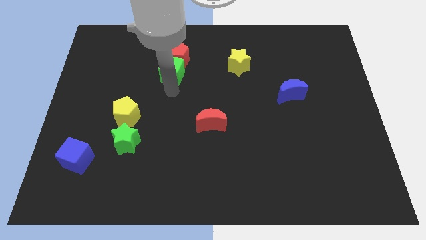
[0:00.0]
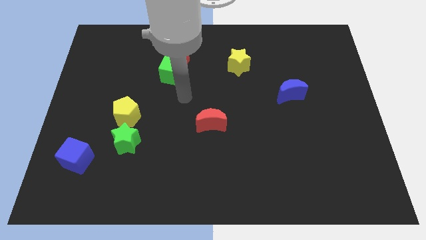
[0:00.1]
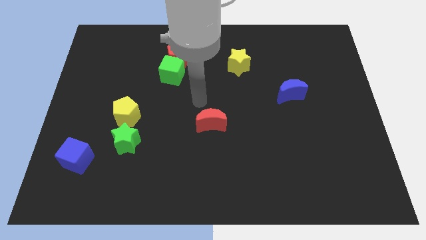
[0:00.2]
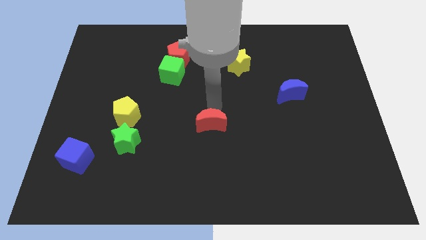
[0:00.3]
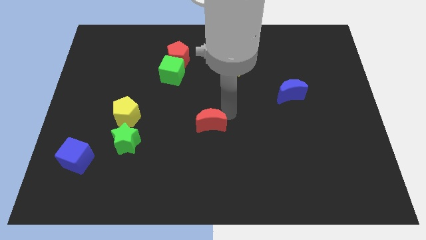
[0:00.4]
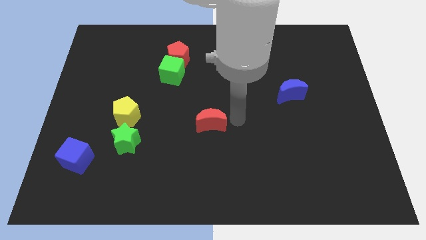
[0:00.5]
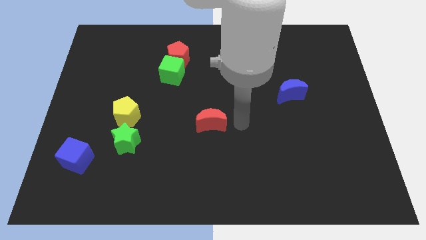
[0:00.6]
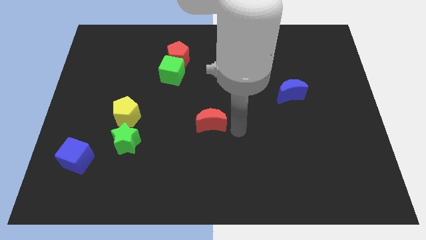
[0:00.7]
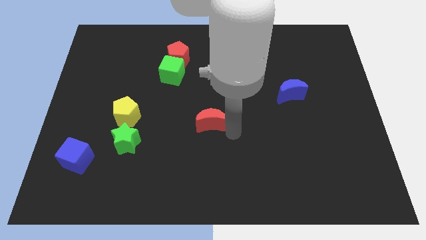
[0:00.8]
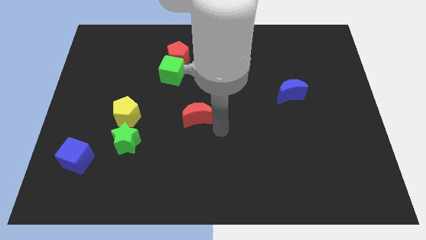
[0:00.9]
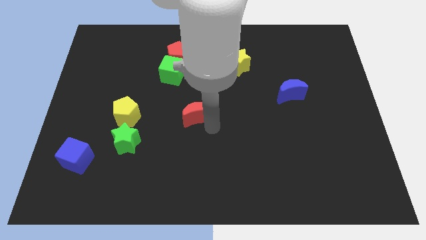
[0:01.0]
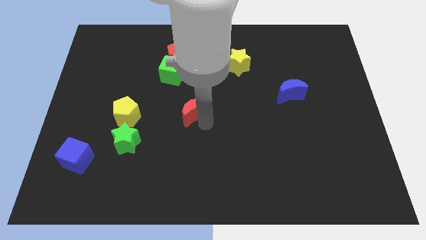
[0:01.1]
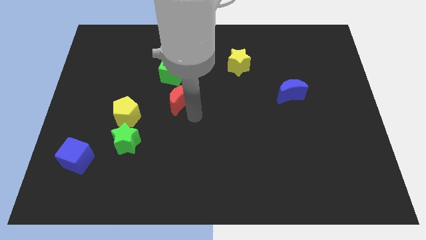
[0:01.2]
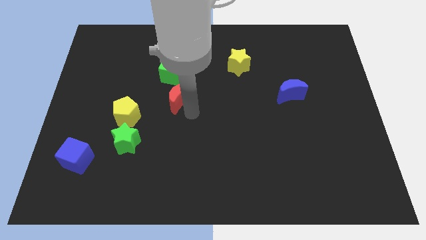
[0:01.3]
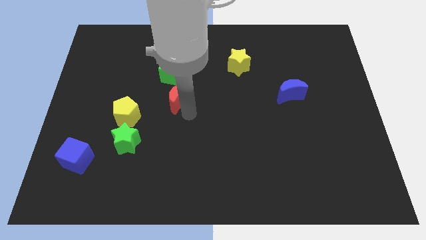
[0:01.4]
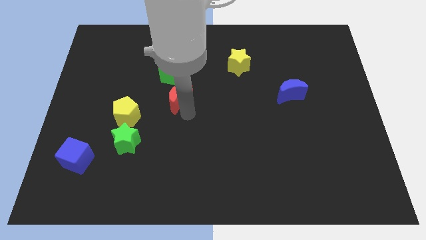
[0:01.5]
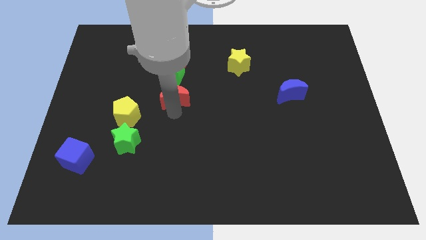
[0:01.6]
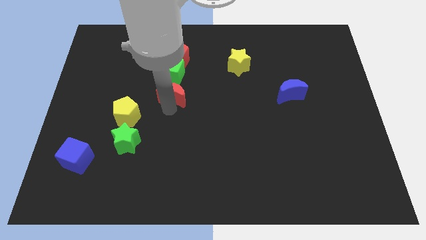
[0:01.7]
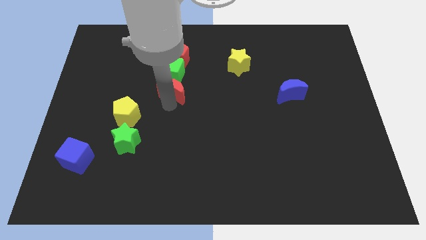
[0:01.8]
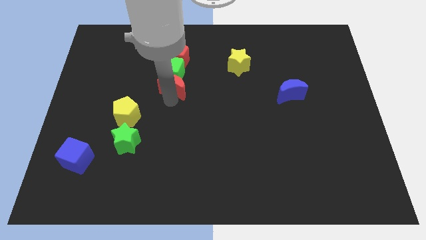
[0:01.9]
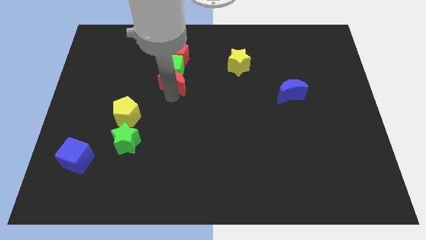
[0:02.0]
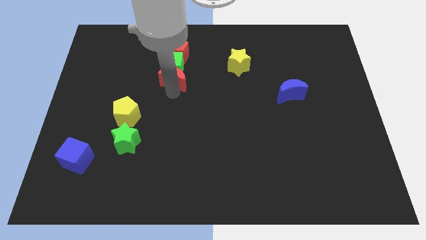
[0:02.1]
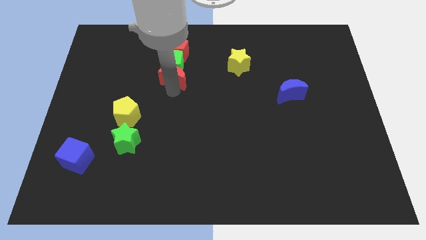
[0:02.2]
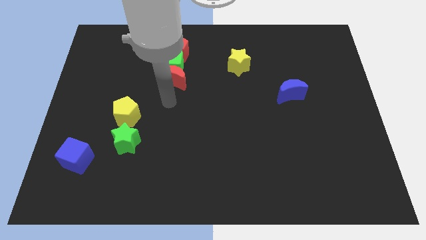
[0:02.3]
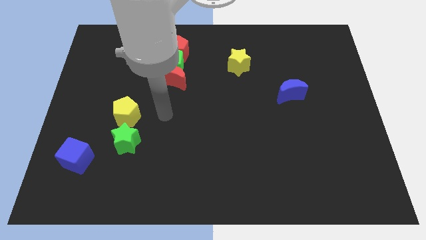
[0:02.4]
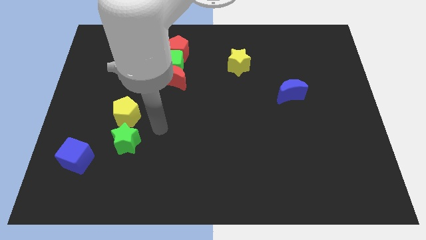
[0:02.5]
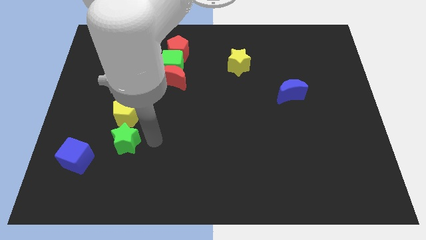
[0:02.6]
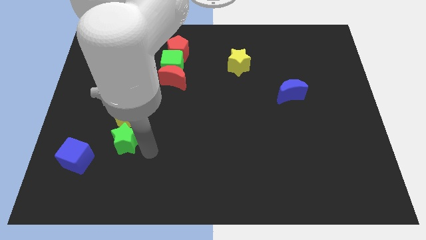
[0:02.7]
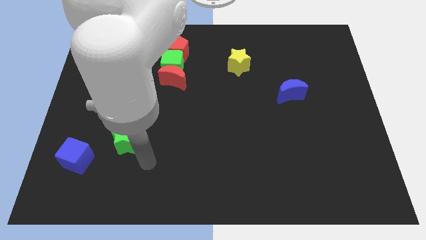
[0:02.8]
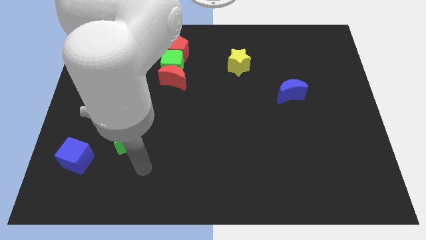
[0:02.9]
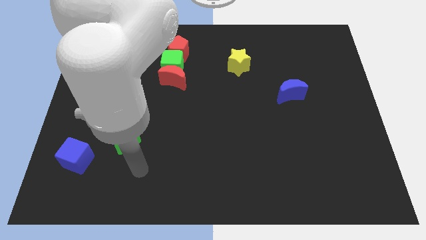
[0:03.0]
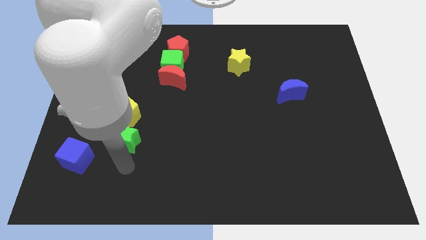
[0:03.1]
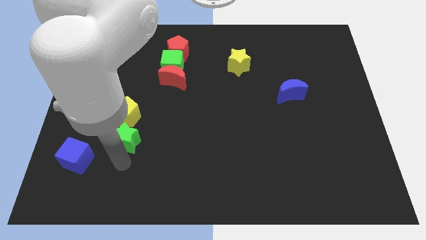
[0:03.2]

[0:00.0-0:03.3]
push the red crescent to the bottom side of the green cube

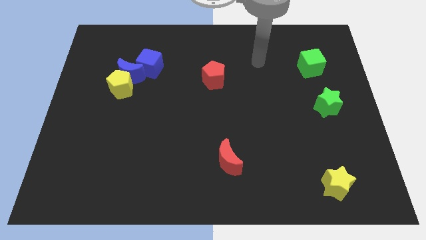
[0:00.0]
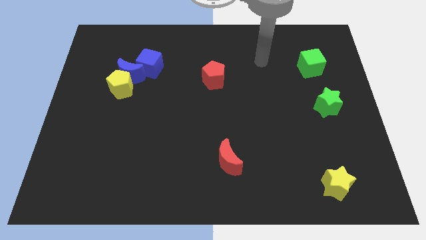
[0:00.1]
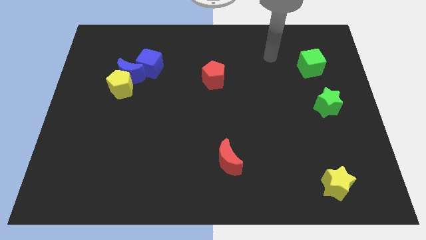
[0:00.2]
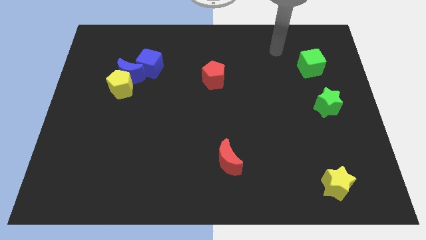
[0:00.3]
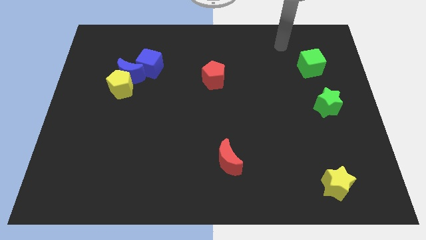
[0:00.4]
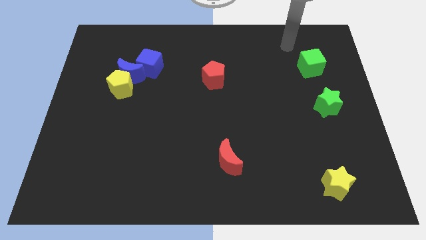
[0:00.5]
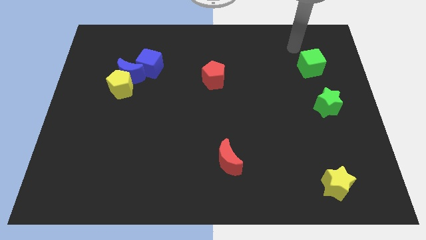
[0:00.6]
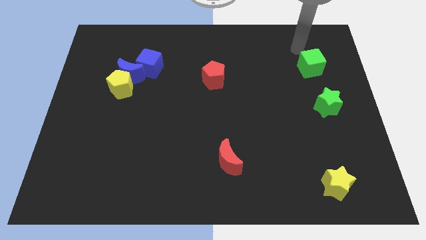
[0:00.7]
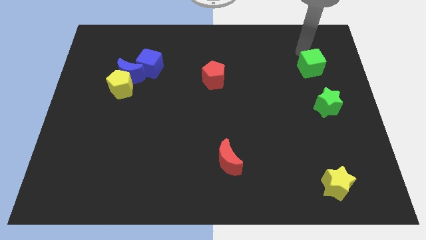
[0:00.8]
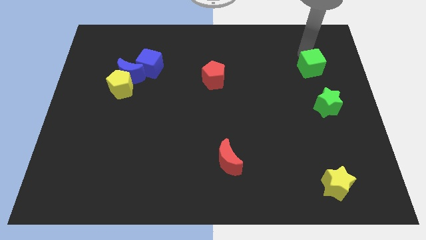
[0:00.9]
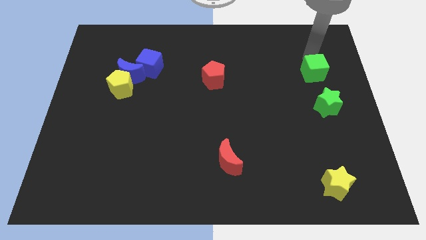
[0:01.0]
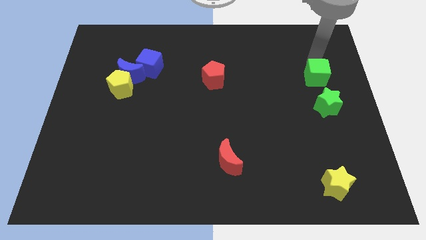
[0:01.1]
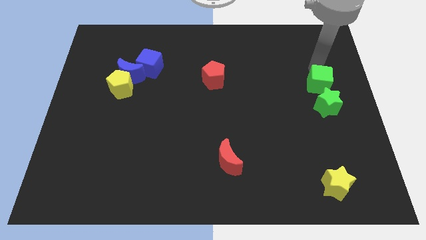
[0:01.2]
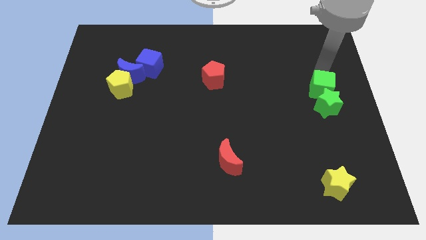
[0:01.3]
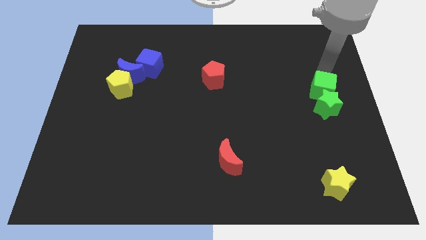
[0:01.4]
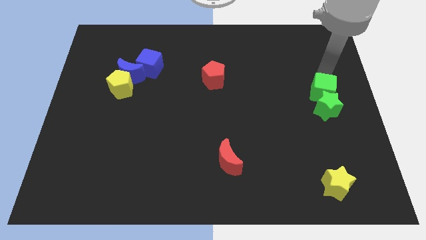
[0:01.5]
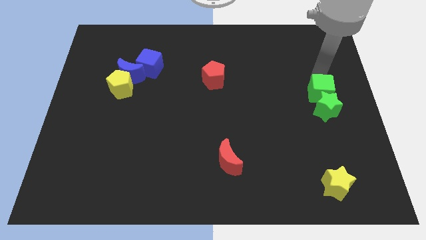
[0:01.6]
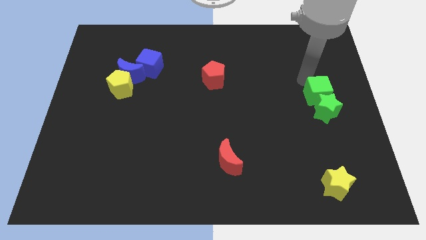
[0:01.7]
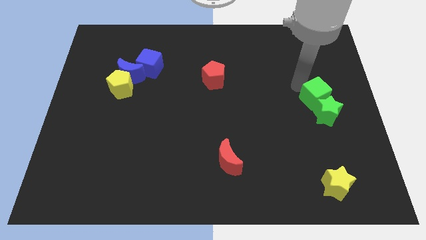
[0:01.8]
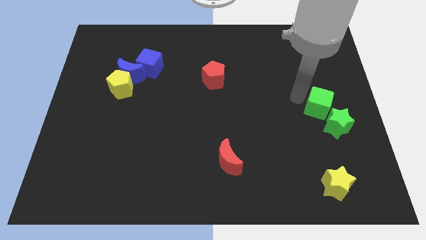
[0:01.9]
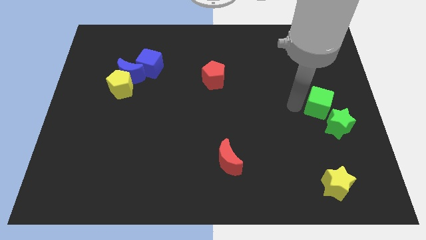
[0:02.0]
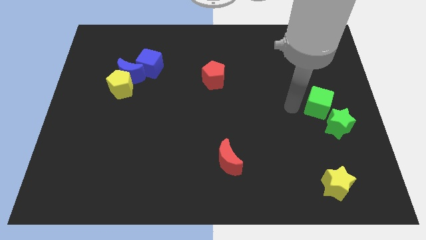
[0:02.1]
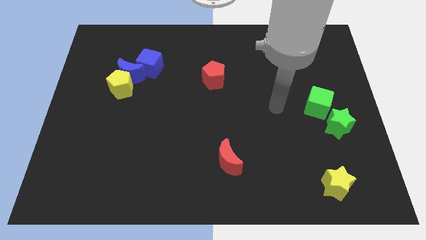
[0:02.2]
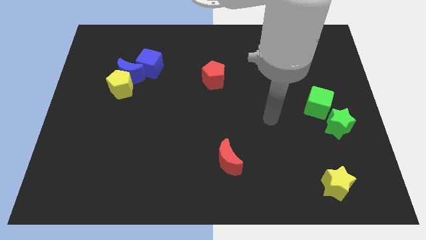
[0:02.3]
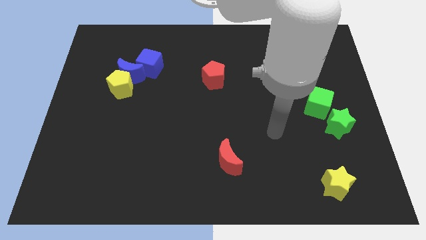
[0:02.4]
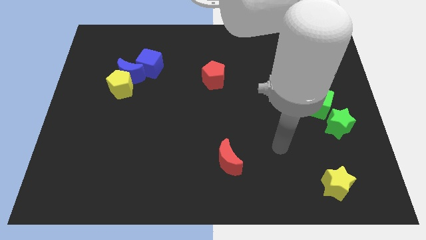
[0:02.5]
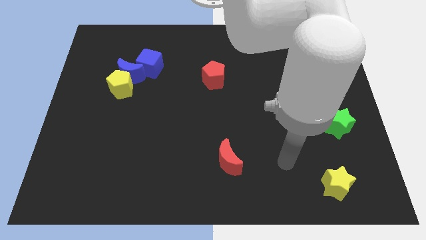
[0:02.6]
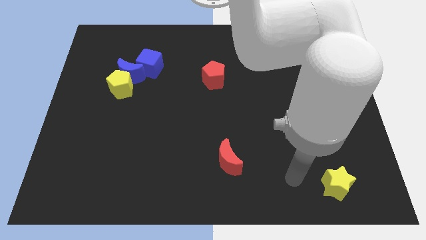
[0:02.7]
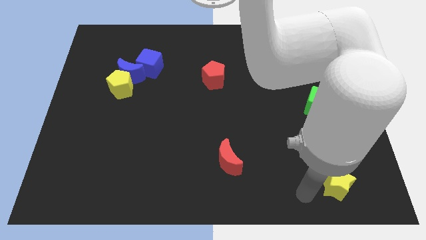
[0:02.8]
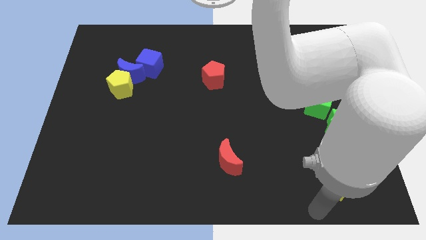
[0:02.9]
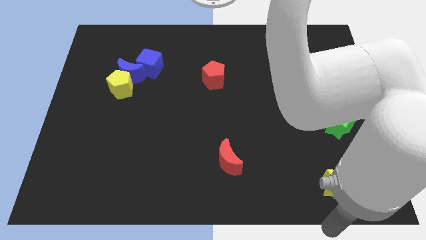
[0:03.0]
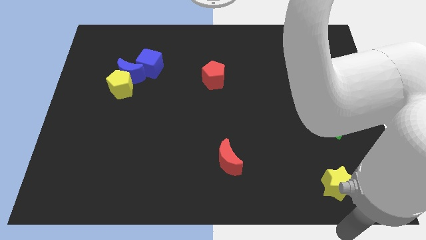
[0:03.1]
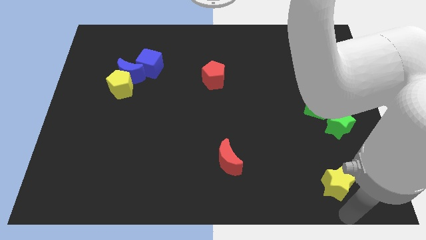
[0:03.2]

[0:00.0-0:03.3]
slightly move green cube and green star towards bottom right

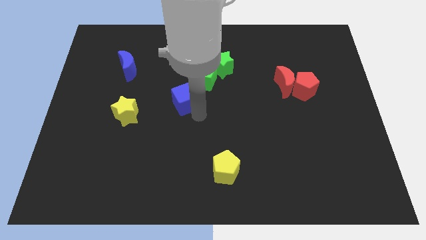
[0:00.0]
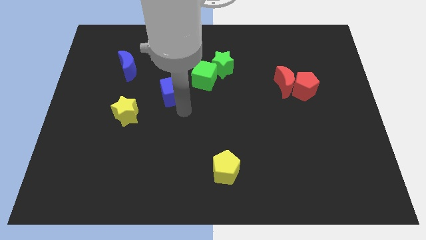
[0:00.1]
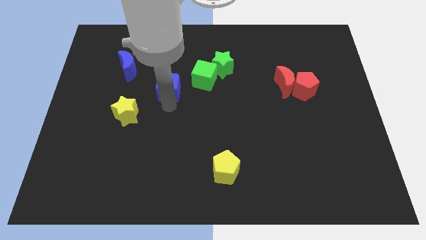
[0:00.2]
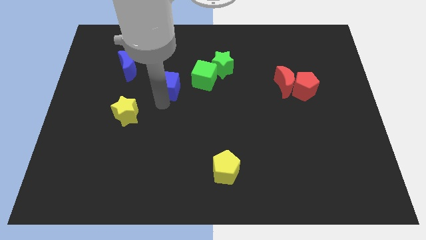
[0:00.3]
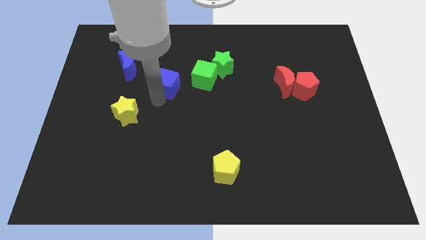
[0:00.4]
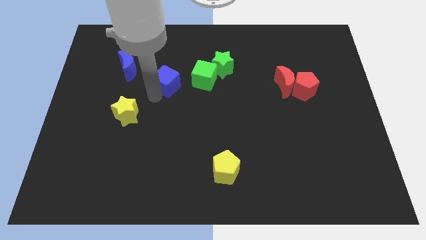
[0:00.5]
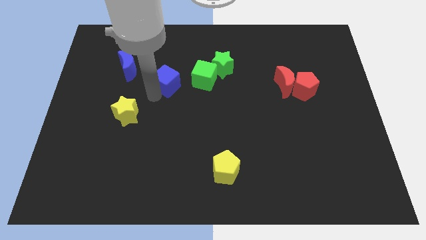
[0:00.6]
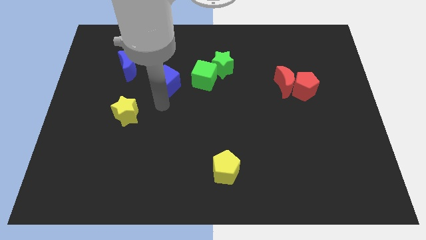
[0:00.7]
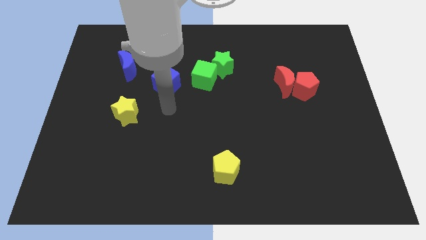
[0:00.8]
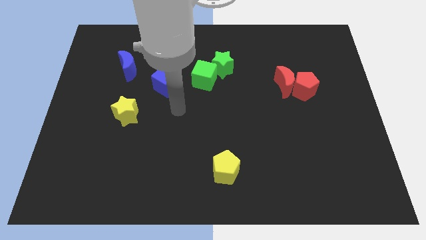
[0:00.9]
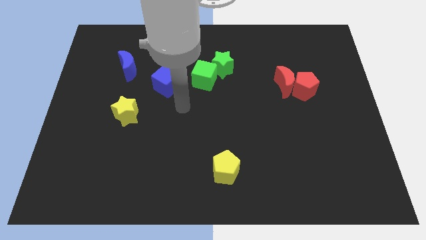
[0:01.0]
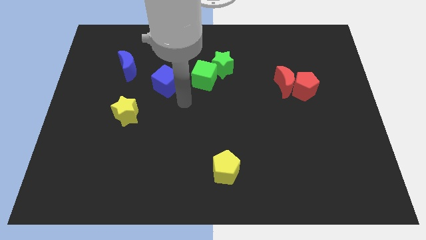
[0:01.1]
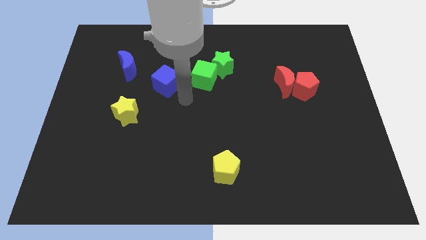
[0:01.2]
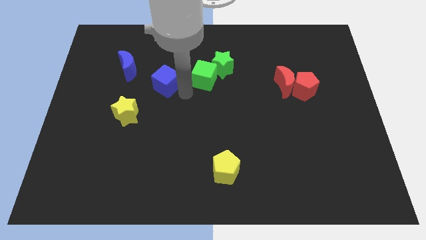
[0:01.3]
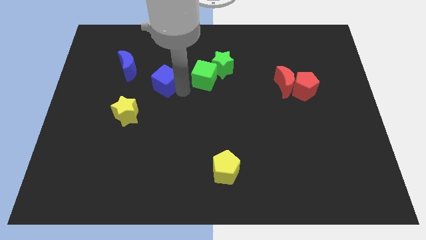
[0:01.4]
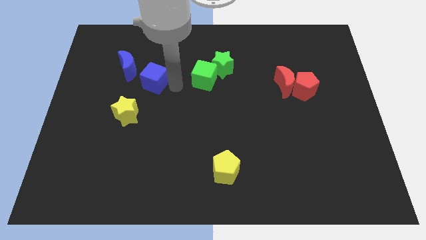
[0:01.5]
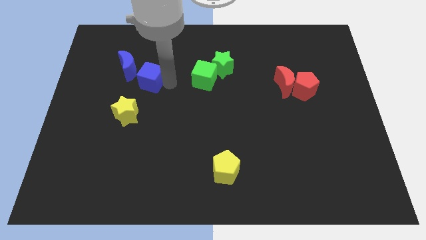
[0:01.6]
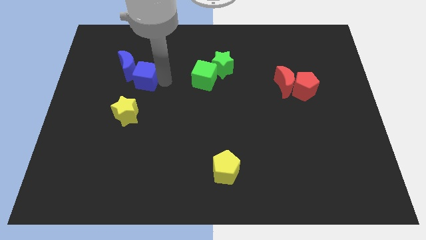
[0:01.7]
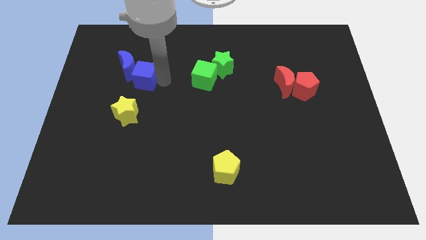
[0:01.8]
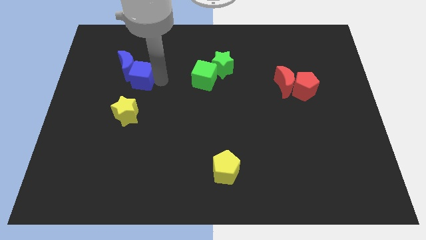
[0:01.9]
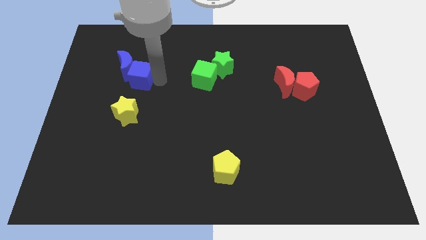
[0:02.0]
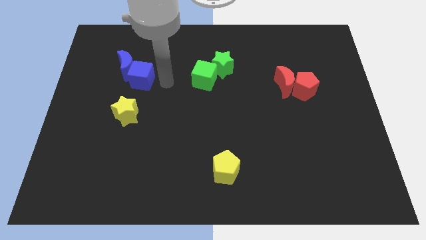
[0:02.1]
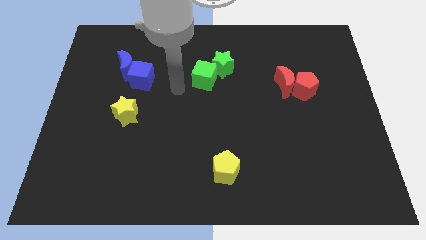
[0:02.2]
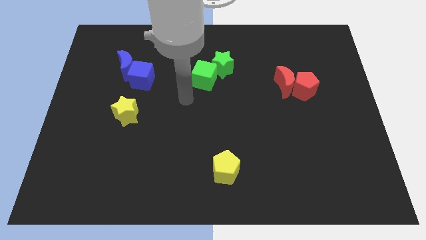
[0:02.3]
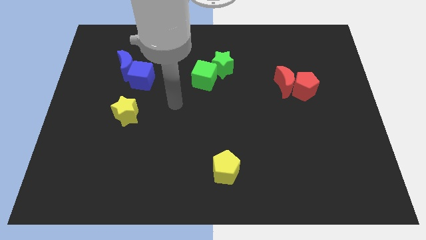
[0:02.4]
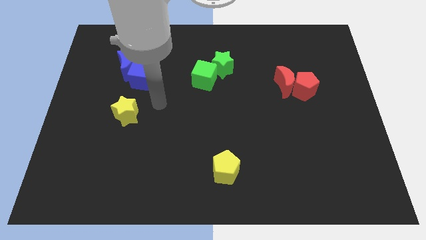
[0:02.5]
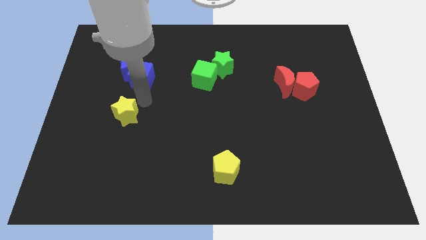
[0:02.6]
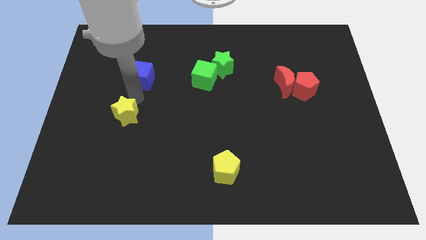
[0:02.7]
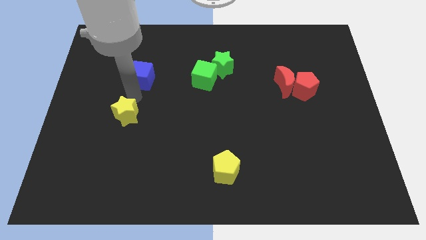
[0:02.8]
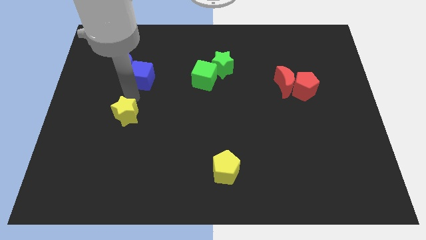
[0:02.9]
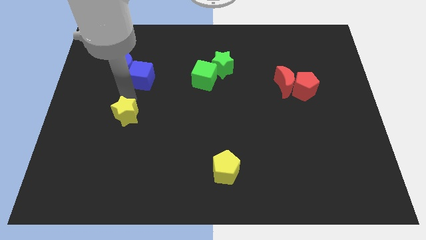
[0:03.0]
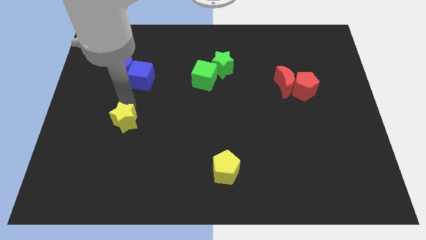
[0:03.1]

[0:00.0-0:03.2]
push the blue cube into the blue moon
